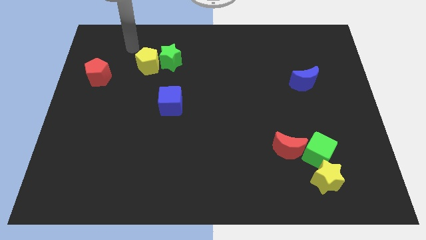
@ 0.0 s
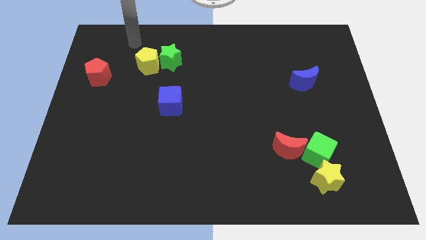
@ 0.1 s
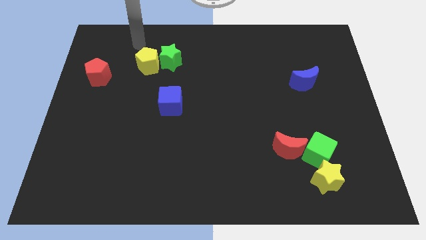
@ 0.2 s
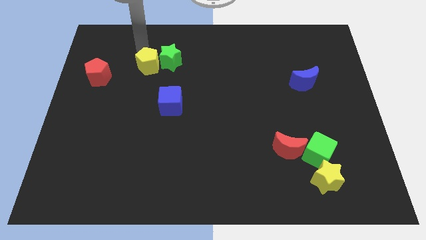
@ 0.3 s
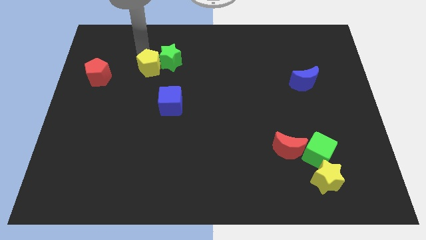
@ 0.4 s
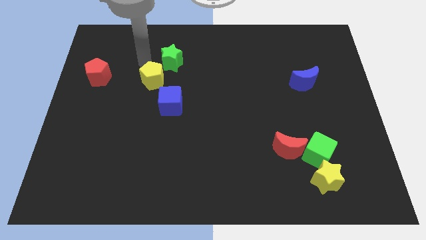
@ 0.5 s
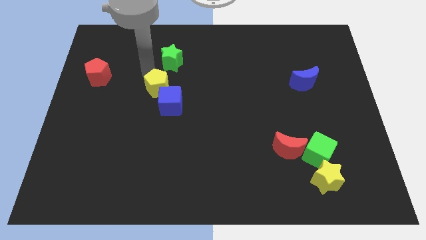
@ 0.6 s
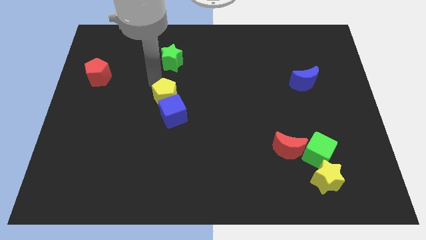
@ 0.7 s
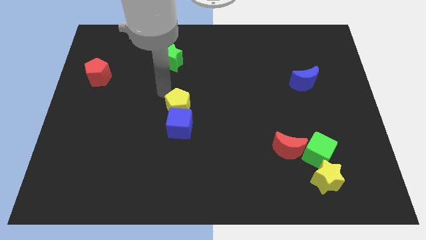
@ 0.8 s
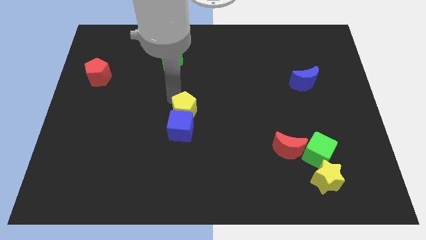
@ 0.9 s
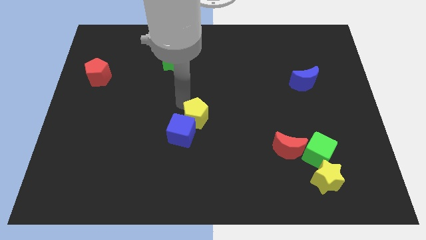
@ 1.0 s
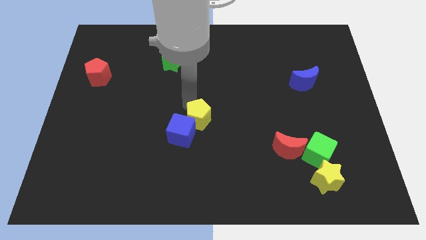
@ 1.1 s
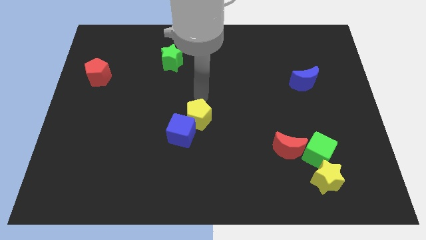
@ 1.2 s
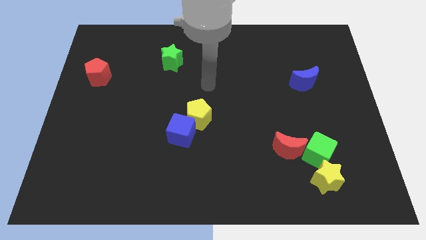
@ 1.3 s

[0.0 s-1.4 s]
push the yellow pentagon along with the blue cube towards the centre of the board

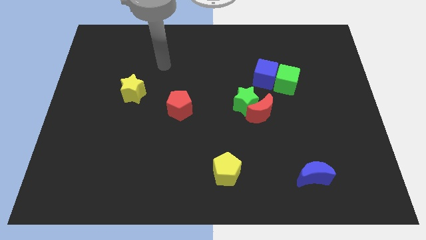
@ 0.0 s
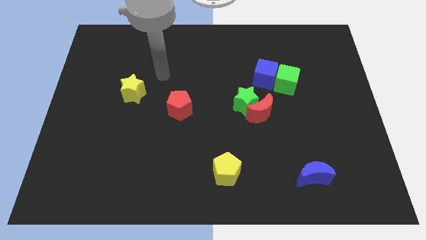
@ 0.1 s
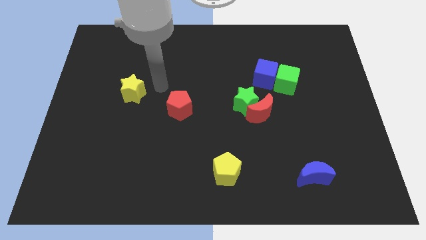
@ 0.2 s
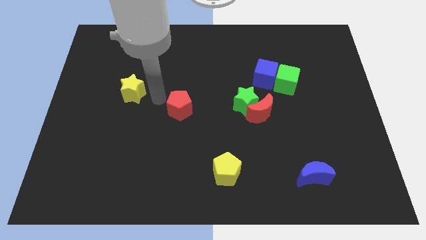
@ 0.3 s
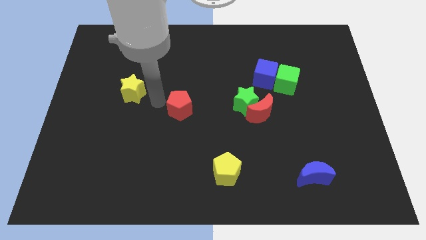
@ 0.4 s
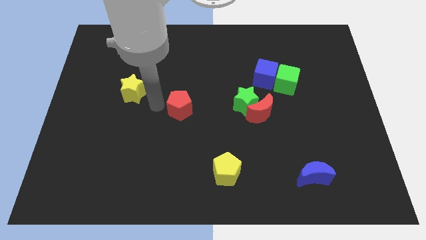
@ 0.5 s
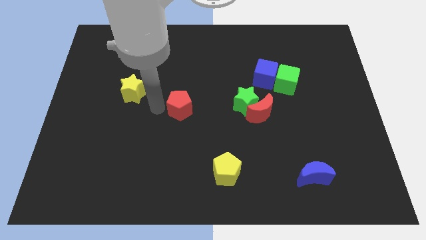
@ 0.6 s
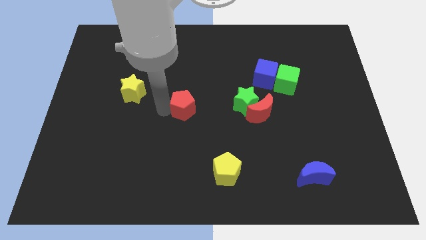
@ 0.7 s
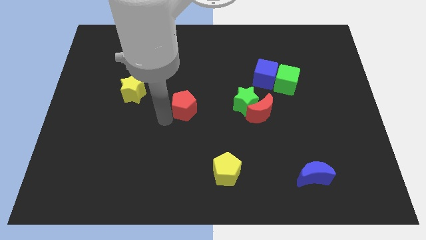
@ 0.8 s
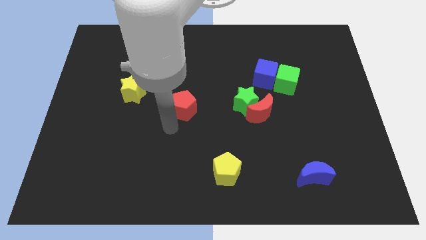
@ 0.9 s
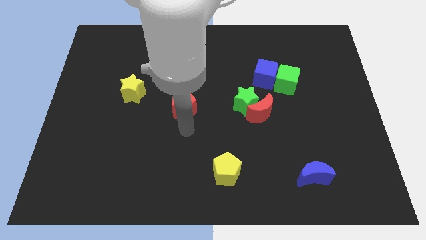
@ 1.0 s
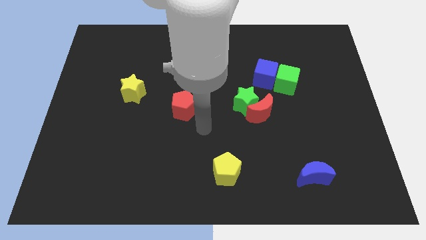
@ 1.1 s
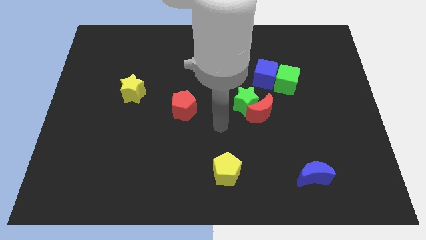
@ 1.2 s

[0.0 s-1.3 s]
slide the red pentagon slightly to the right

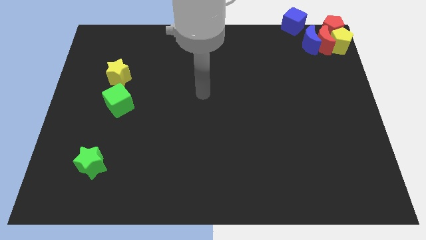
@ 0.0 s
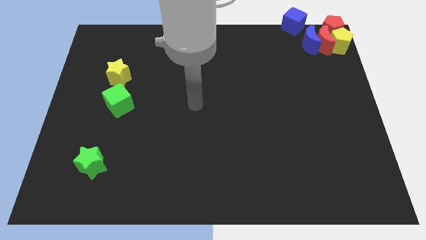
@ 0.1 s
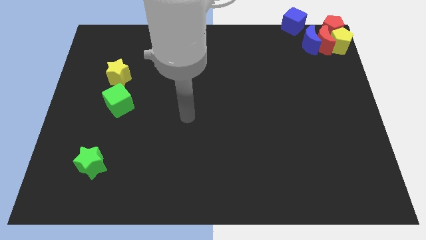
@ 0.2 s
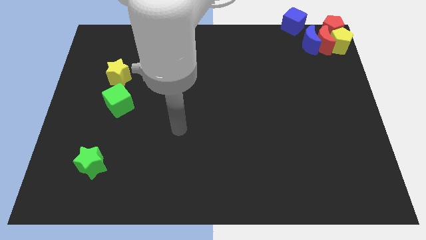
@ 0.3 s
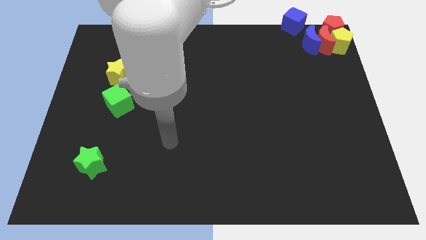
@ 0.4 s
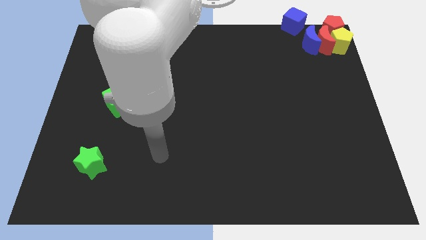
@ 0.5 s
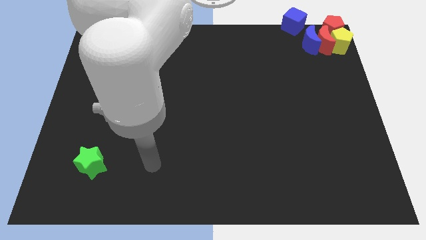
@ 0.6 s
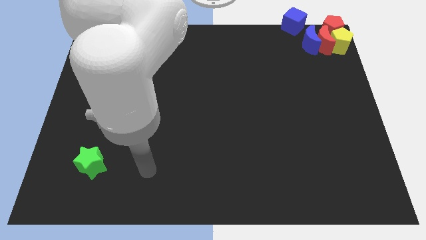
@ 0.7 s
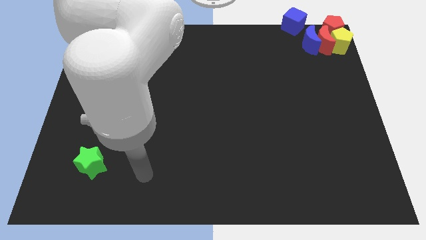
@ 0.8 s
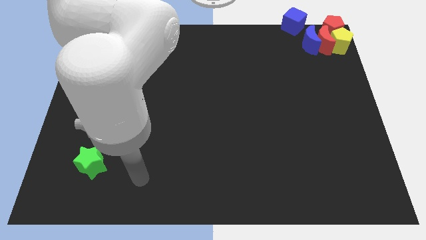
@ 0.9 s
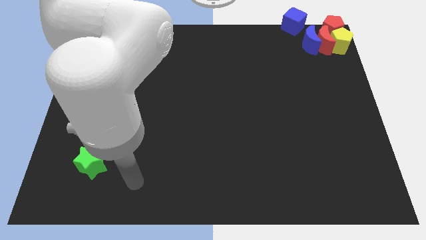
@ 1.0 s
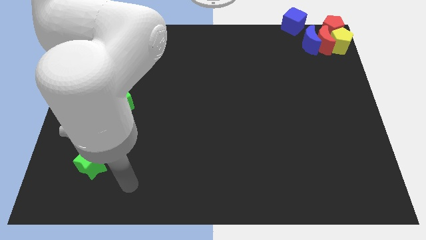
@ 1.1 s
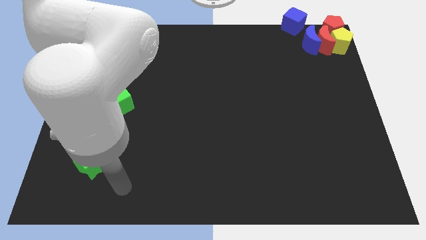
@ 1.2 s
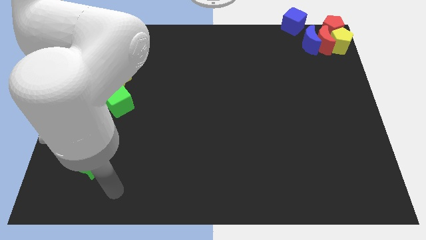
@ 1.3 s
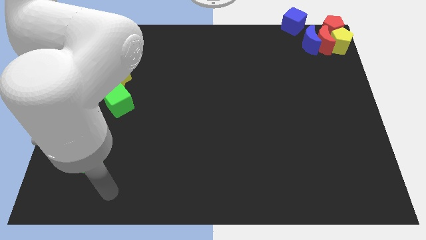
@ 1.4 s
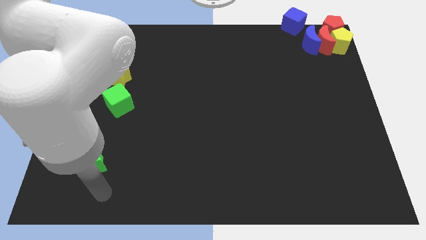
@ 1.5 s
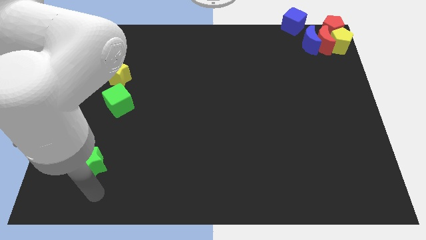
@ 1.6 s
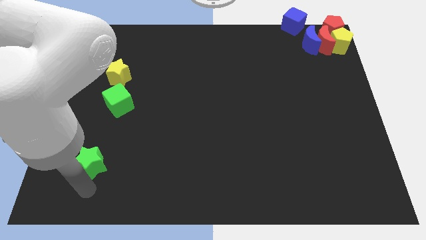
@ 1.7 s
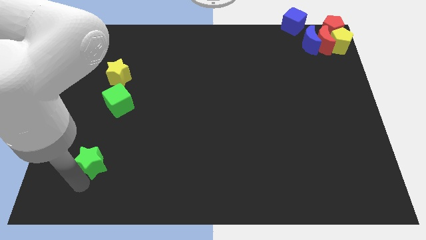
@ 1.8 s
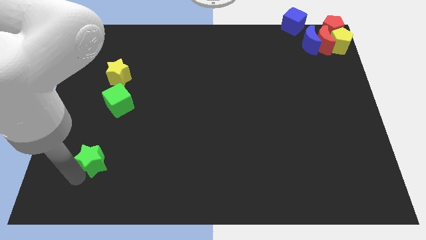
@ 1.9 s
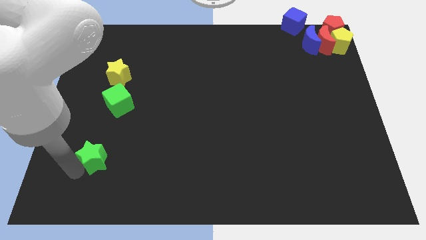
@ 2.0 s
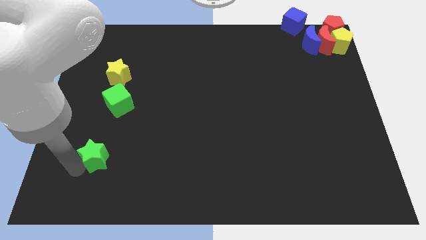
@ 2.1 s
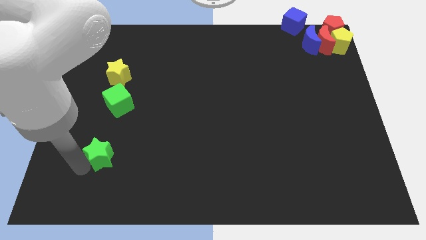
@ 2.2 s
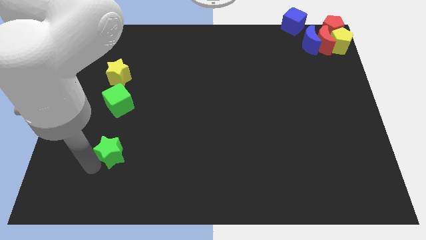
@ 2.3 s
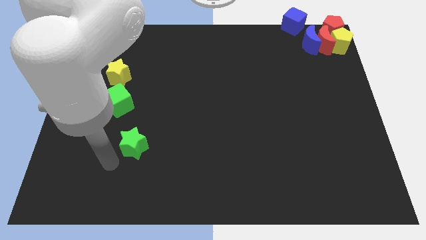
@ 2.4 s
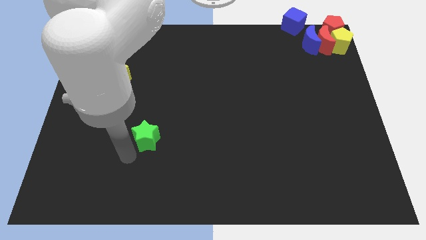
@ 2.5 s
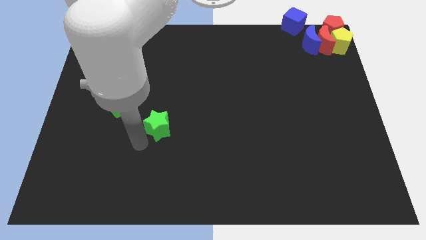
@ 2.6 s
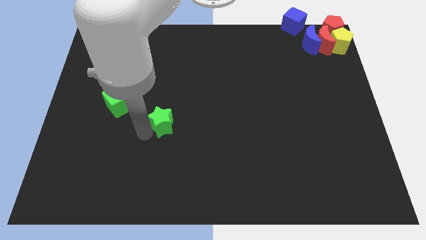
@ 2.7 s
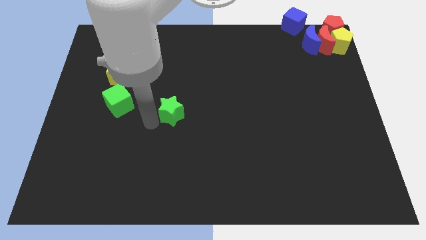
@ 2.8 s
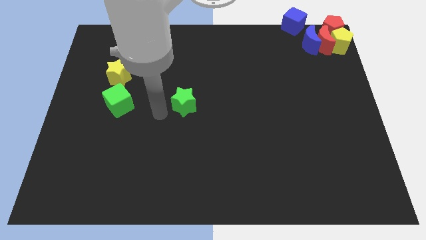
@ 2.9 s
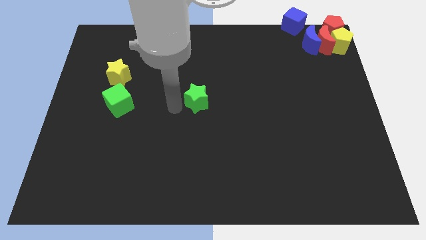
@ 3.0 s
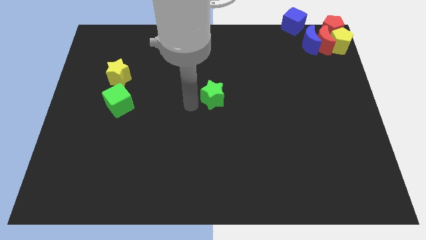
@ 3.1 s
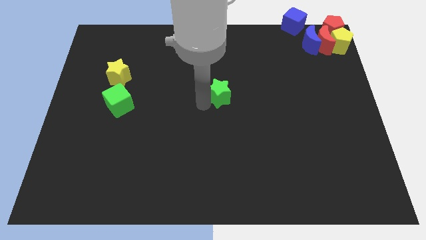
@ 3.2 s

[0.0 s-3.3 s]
move your arm and move the green star towards the center

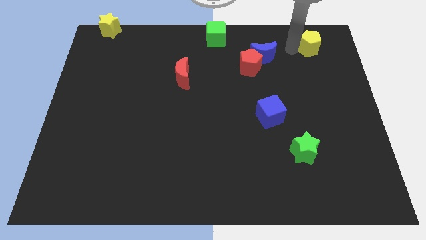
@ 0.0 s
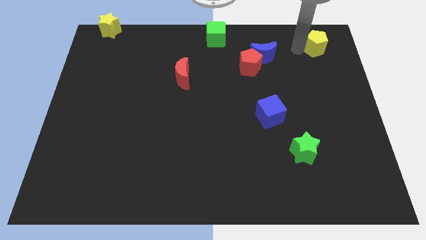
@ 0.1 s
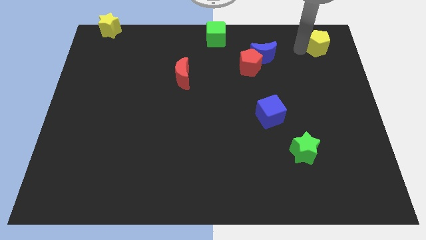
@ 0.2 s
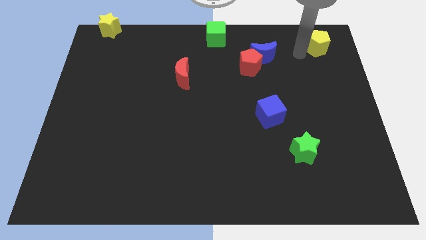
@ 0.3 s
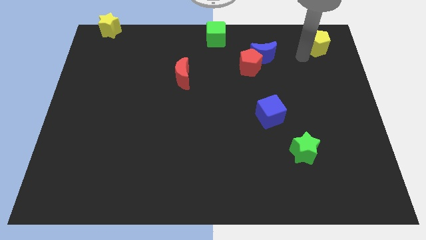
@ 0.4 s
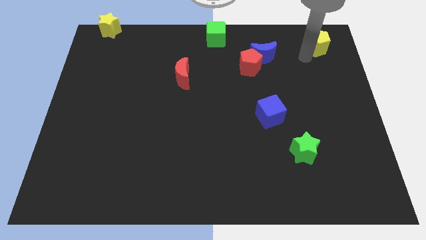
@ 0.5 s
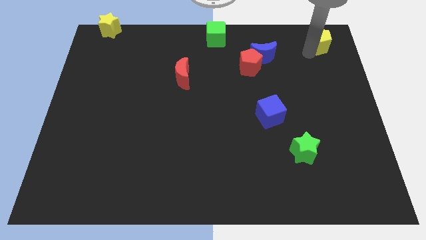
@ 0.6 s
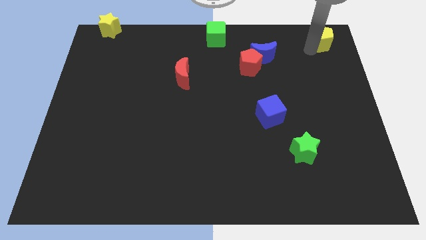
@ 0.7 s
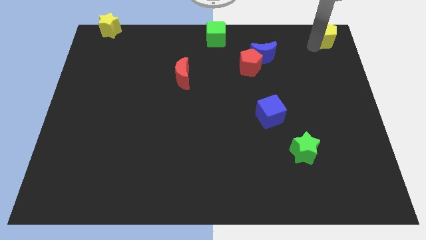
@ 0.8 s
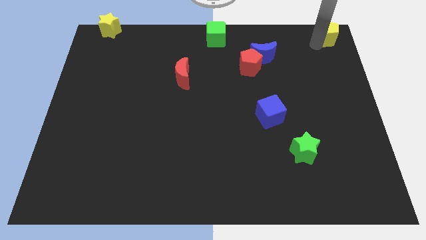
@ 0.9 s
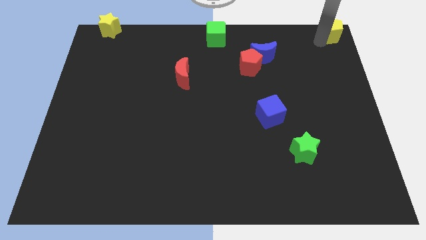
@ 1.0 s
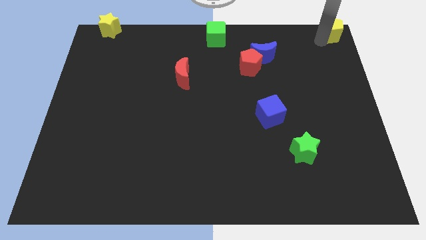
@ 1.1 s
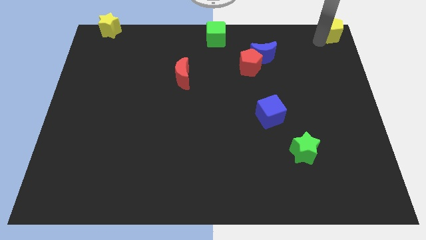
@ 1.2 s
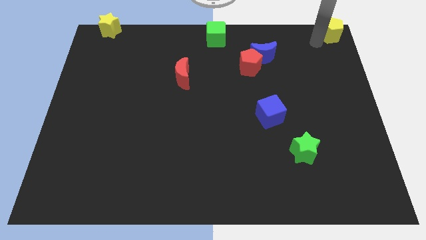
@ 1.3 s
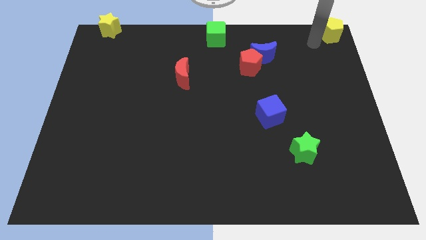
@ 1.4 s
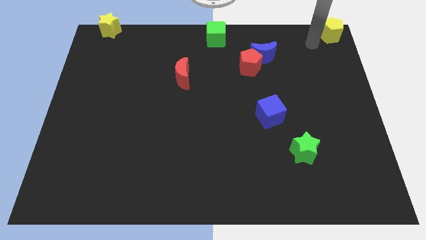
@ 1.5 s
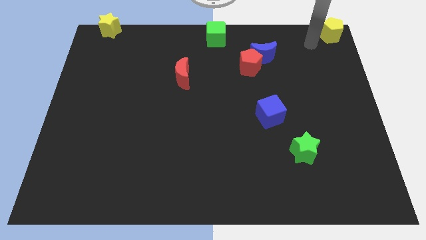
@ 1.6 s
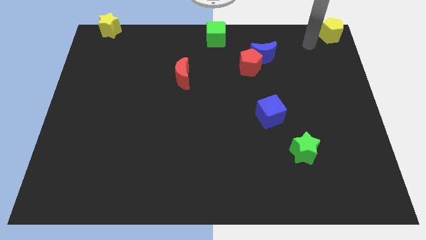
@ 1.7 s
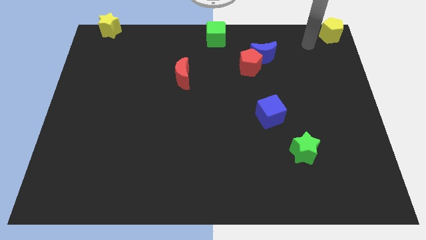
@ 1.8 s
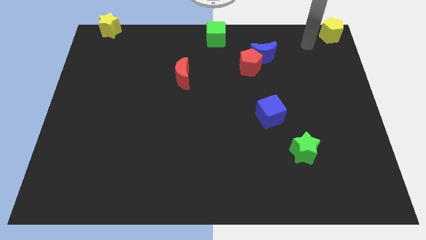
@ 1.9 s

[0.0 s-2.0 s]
push the yellow pentagon towards the top right side of the board

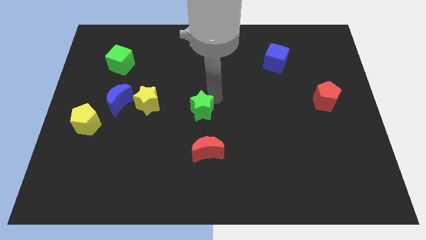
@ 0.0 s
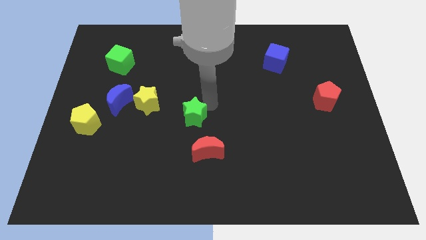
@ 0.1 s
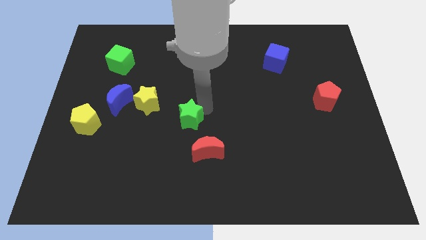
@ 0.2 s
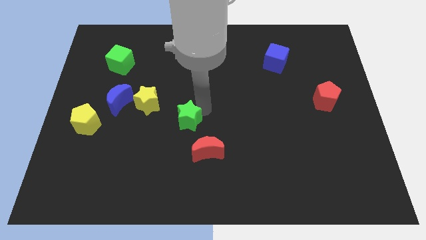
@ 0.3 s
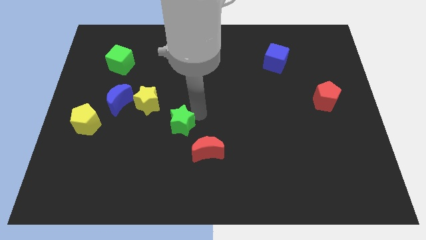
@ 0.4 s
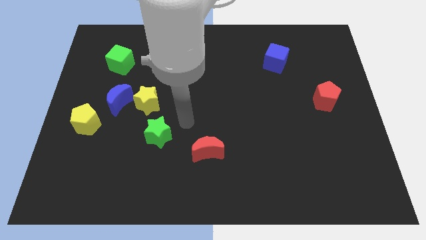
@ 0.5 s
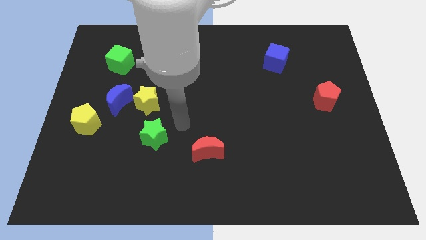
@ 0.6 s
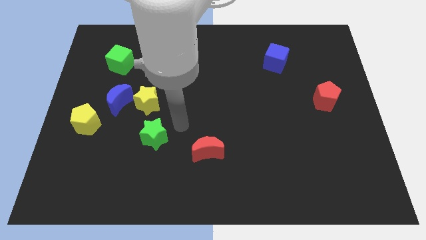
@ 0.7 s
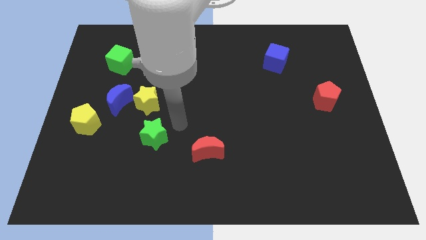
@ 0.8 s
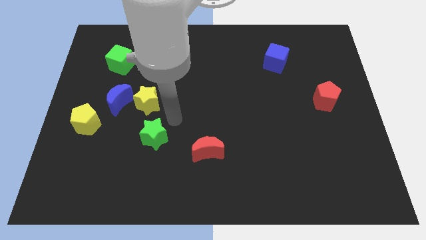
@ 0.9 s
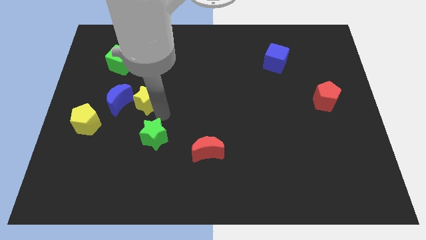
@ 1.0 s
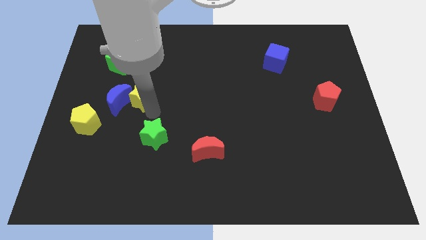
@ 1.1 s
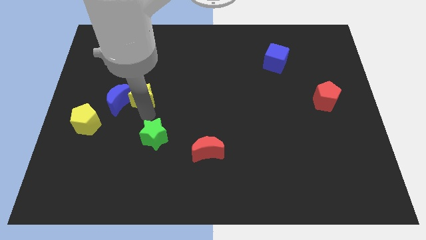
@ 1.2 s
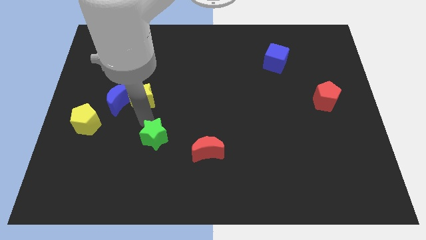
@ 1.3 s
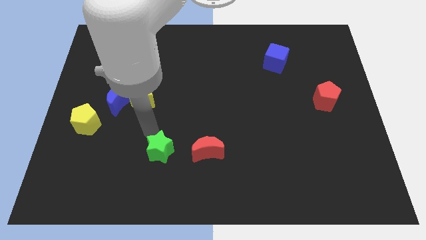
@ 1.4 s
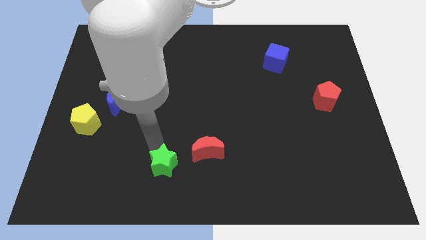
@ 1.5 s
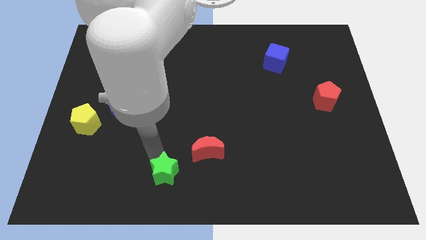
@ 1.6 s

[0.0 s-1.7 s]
push the green star to the left of the red crescent
